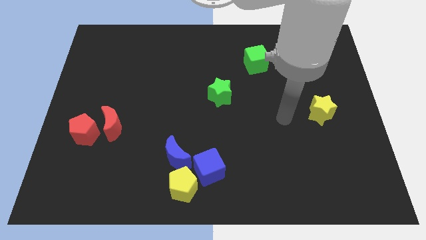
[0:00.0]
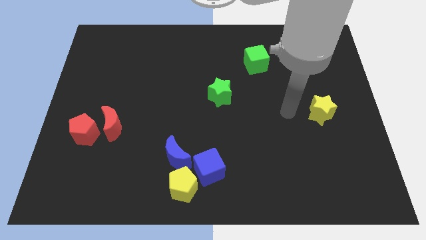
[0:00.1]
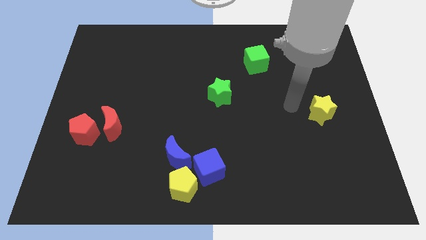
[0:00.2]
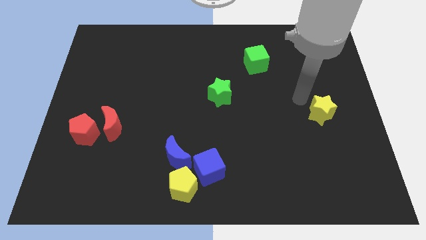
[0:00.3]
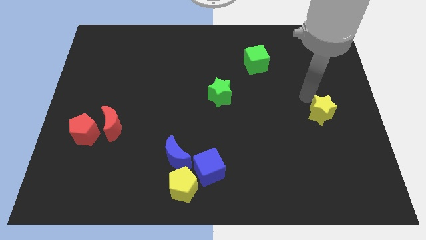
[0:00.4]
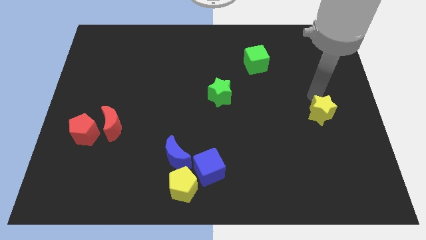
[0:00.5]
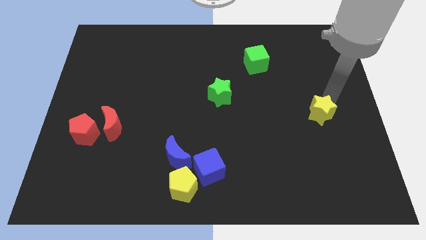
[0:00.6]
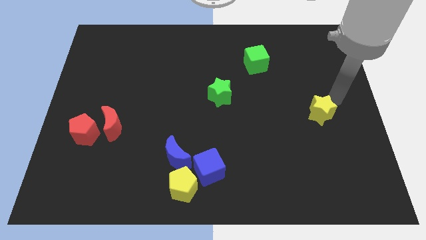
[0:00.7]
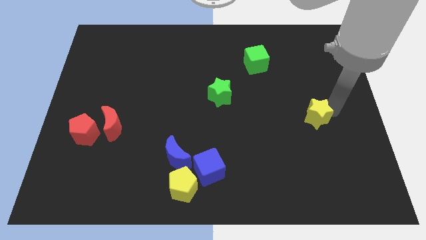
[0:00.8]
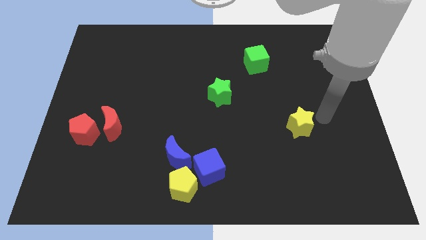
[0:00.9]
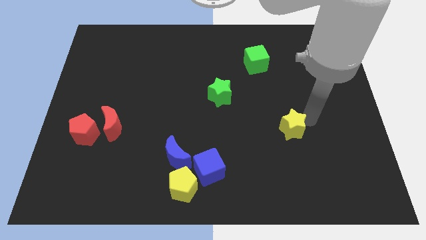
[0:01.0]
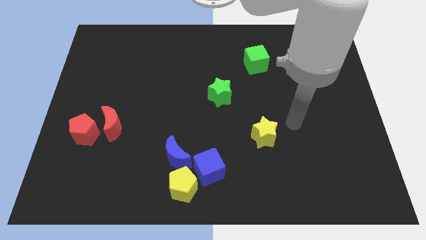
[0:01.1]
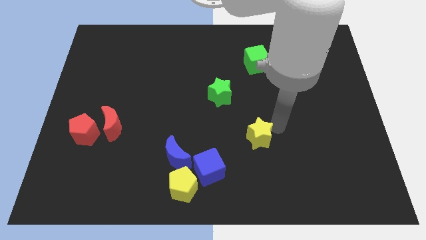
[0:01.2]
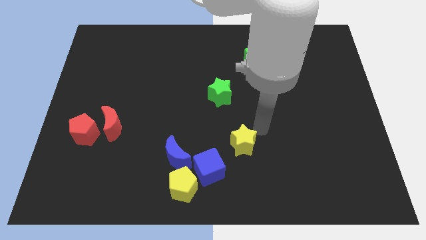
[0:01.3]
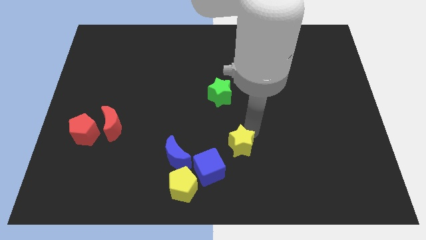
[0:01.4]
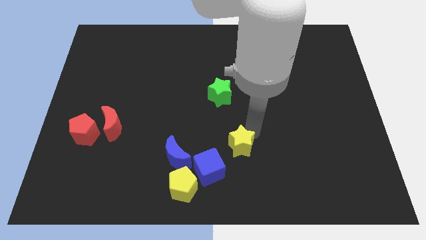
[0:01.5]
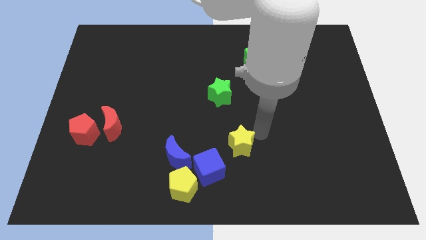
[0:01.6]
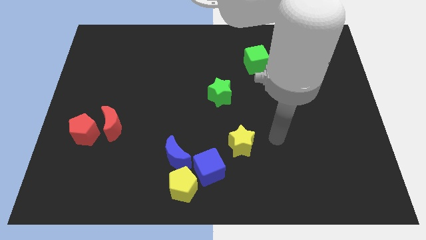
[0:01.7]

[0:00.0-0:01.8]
move the yellow star to the top right of the blue cube

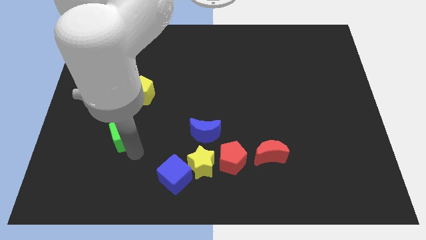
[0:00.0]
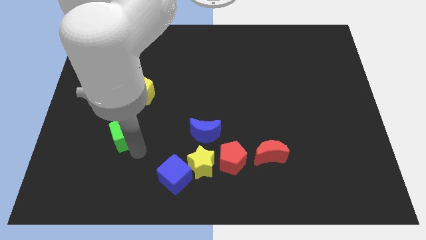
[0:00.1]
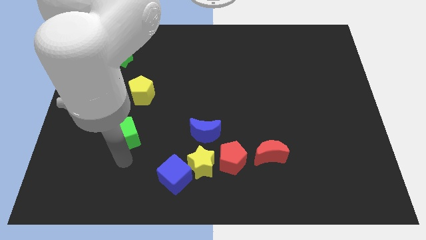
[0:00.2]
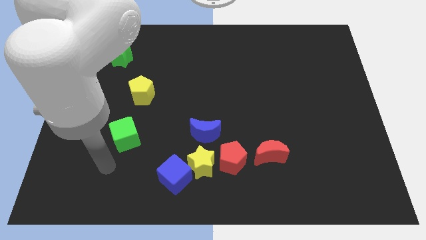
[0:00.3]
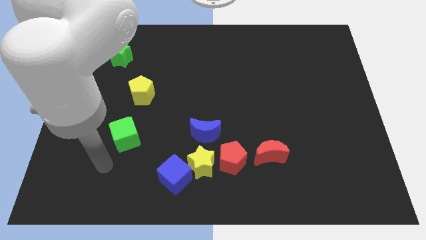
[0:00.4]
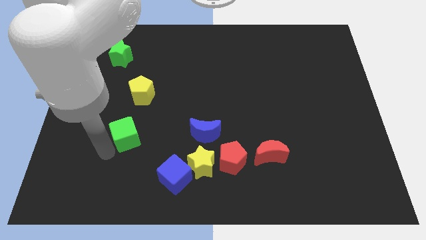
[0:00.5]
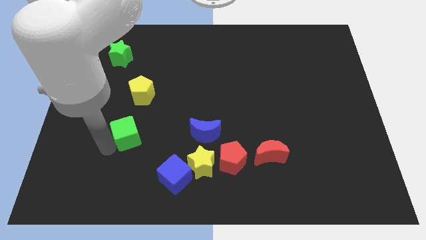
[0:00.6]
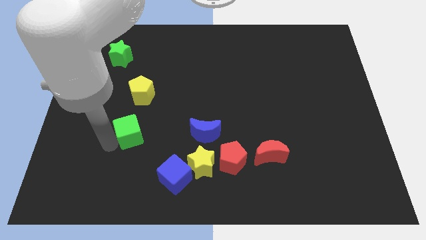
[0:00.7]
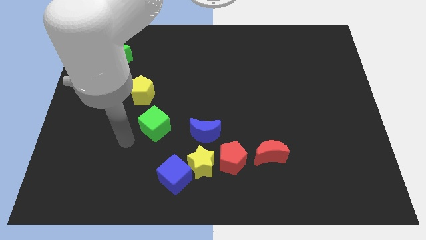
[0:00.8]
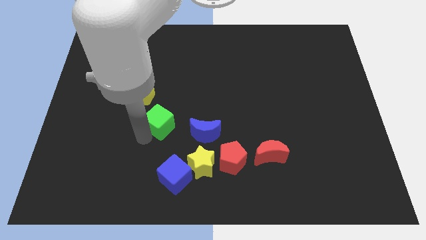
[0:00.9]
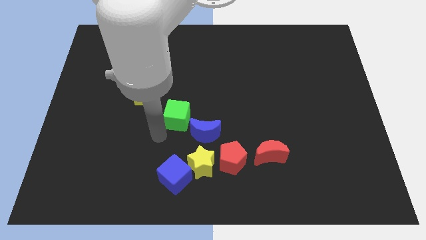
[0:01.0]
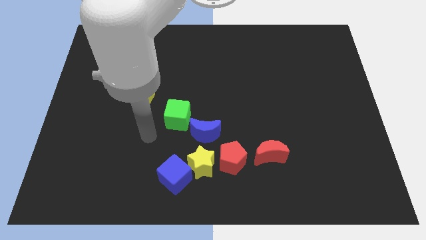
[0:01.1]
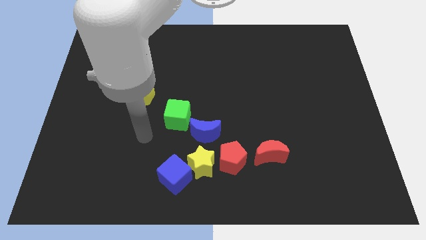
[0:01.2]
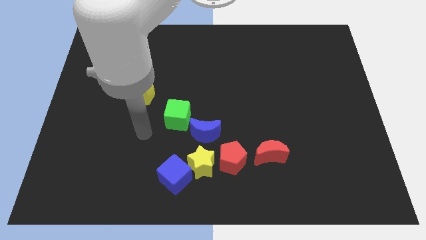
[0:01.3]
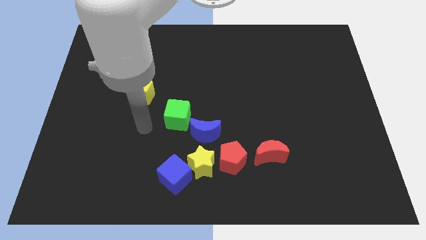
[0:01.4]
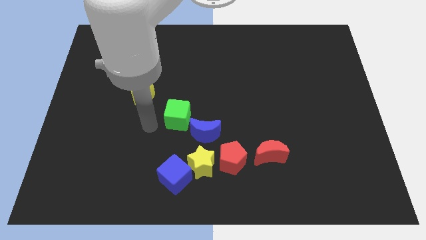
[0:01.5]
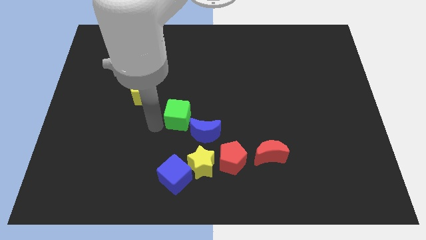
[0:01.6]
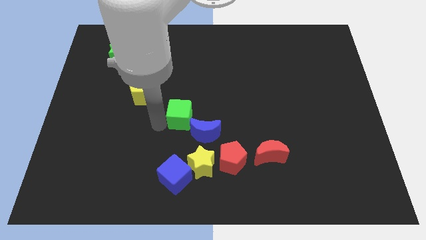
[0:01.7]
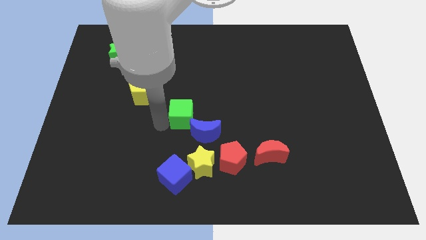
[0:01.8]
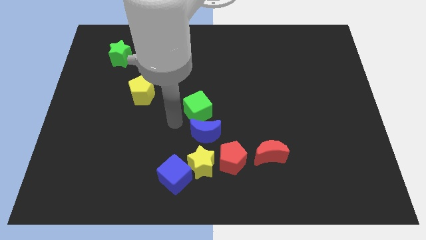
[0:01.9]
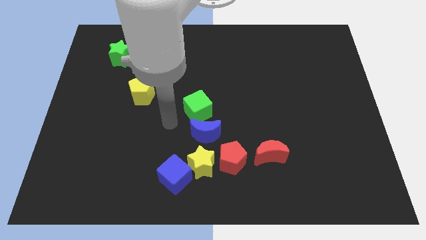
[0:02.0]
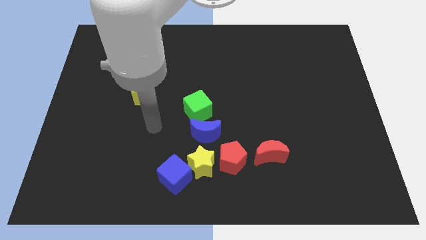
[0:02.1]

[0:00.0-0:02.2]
move the green cube above the blue moon

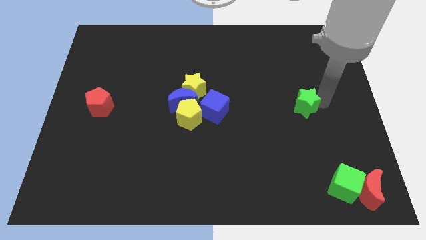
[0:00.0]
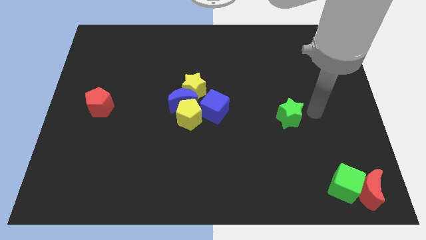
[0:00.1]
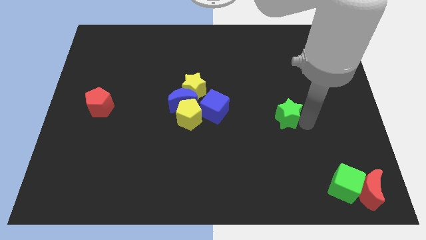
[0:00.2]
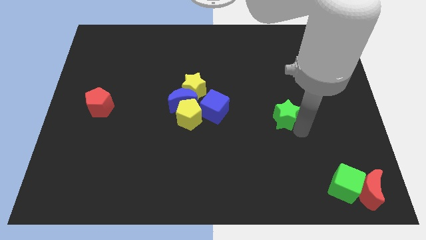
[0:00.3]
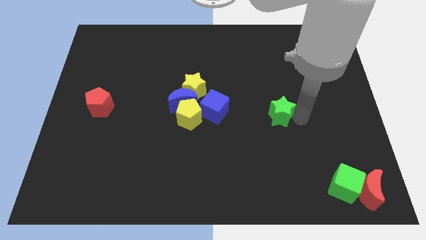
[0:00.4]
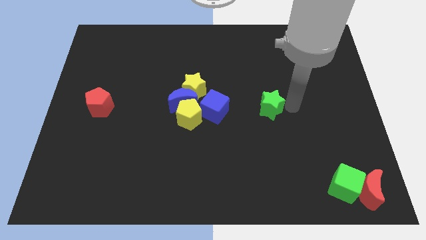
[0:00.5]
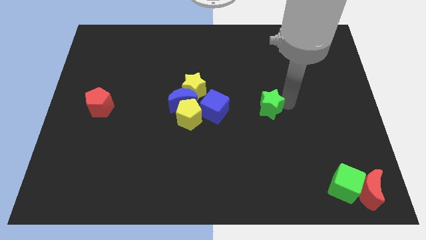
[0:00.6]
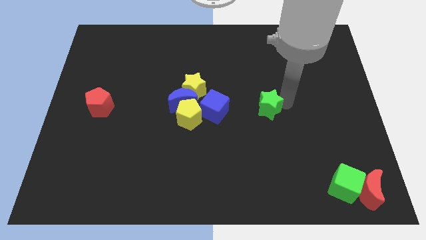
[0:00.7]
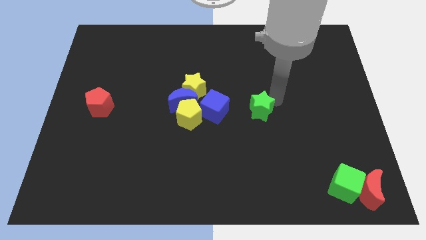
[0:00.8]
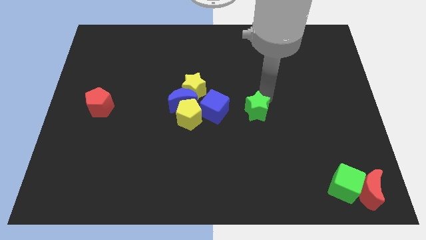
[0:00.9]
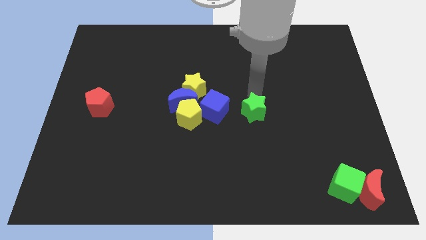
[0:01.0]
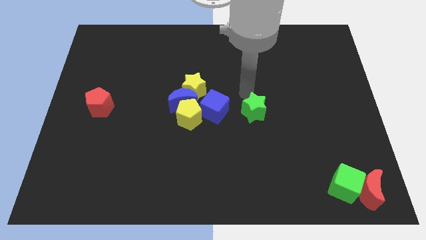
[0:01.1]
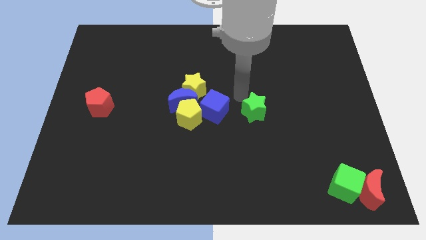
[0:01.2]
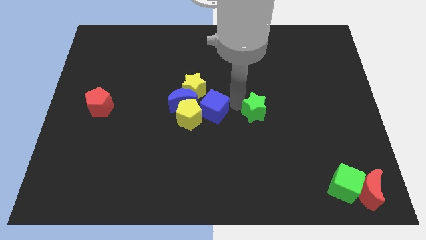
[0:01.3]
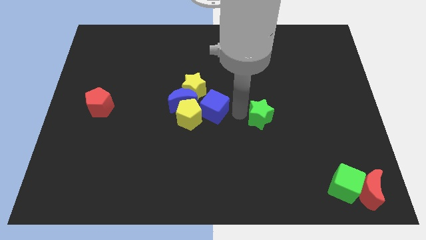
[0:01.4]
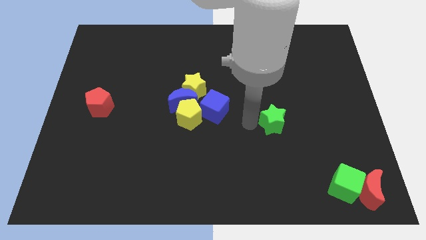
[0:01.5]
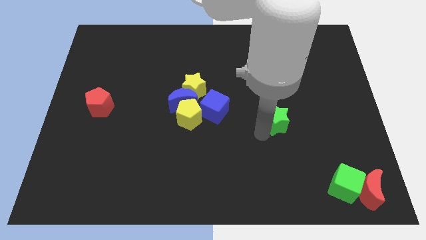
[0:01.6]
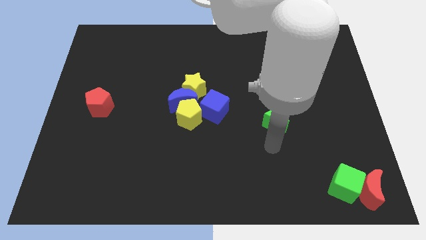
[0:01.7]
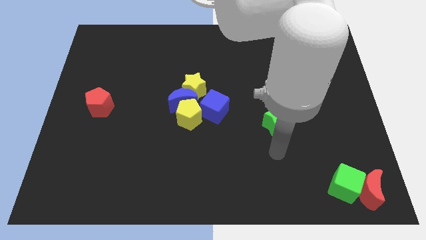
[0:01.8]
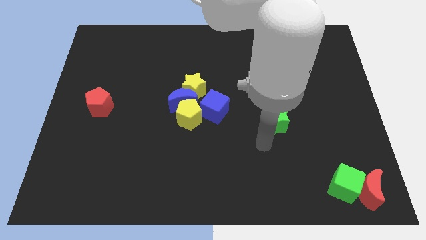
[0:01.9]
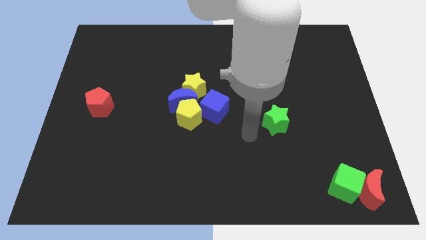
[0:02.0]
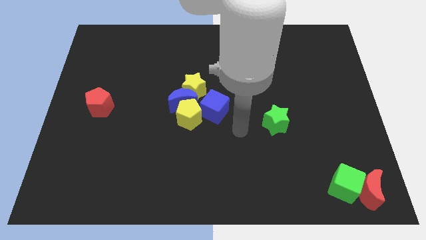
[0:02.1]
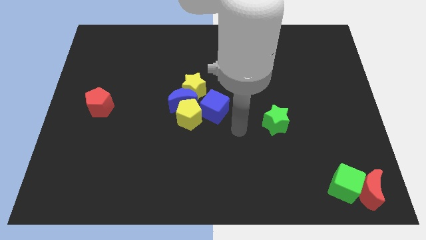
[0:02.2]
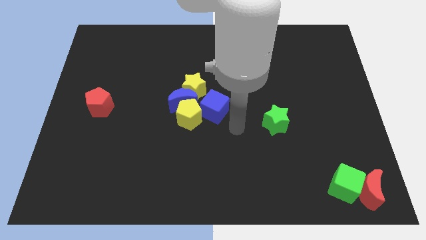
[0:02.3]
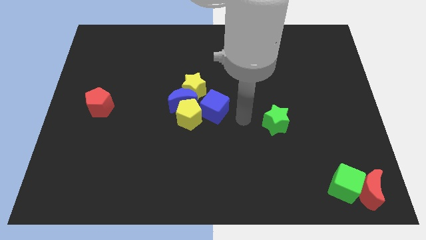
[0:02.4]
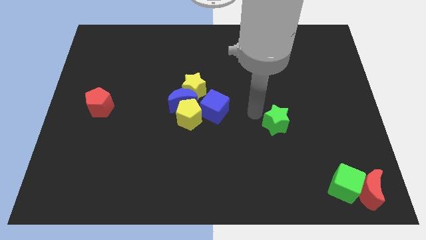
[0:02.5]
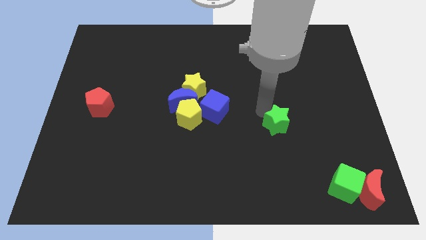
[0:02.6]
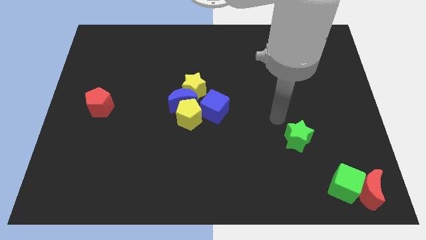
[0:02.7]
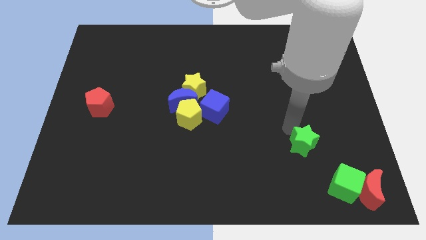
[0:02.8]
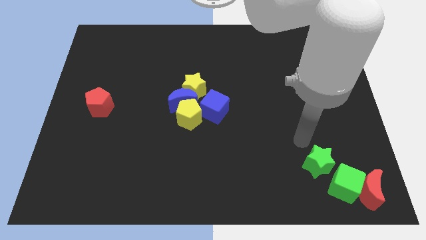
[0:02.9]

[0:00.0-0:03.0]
push the green star to the top left of the green cube

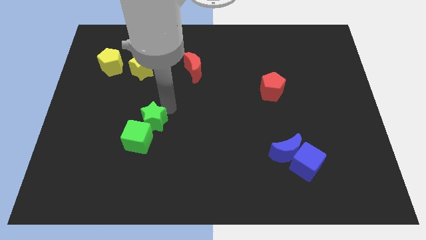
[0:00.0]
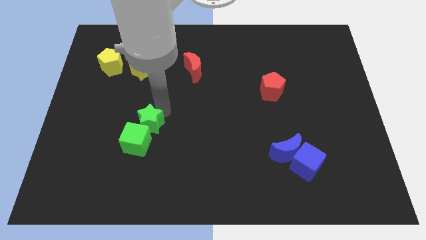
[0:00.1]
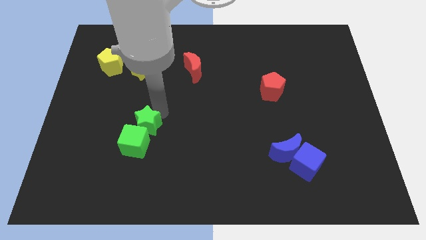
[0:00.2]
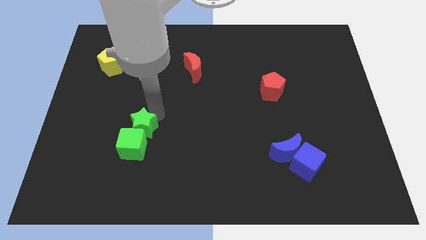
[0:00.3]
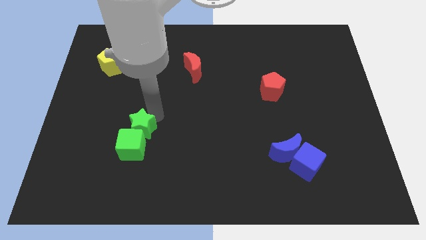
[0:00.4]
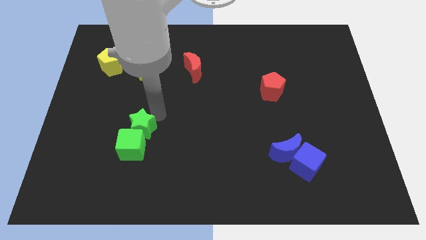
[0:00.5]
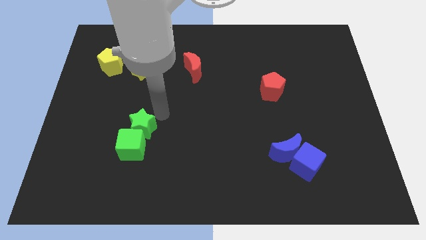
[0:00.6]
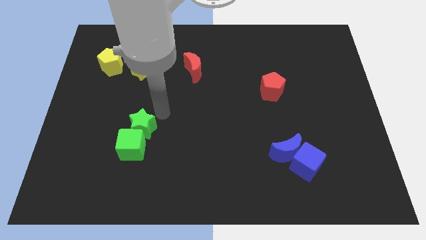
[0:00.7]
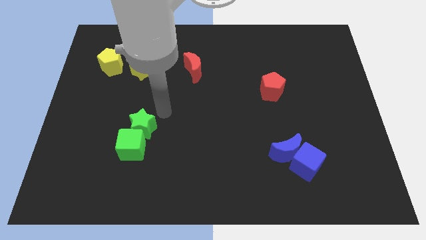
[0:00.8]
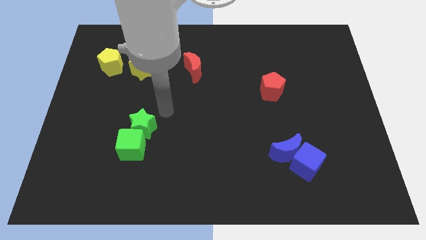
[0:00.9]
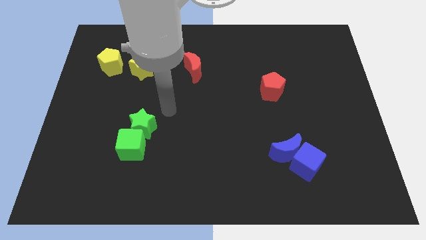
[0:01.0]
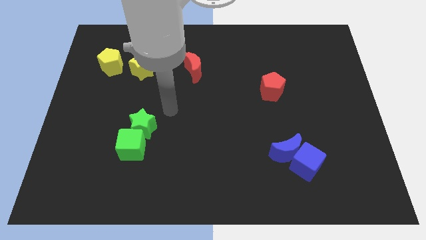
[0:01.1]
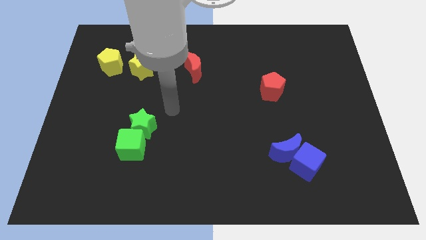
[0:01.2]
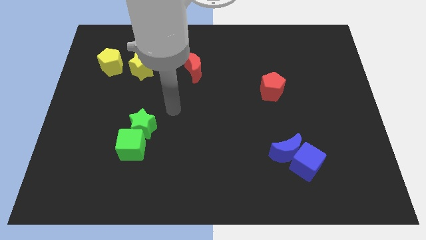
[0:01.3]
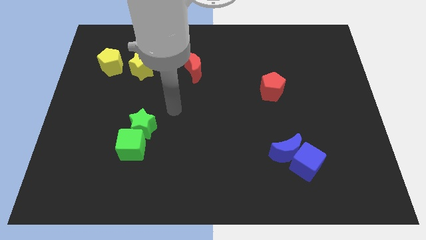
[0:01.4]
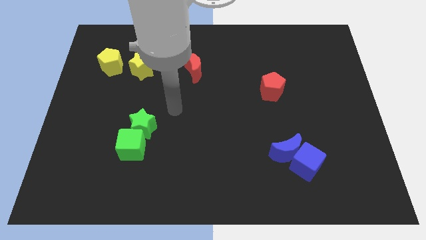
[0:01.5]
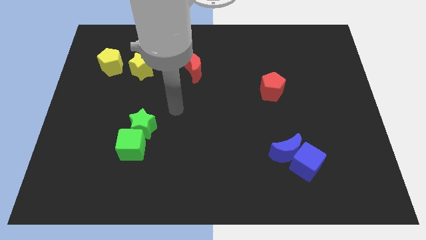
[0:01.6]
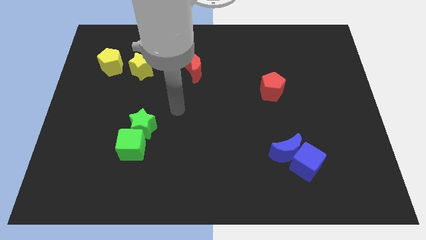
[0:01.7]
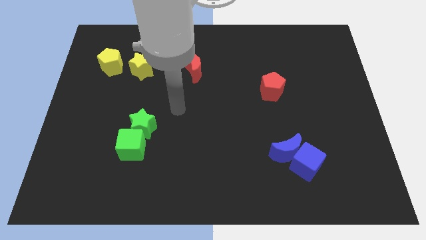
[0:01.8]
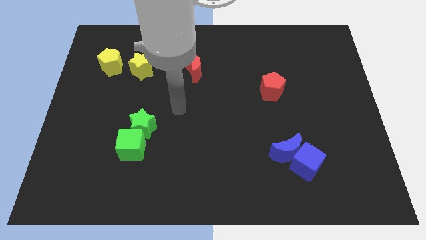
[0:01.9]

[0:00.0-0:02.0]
slightly push the green cube with green star
